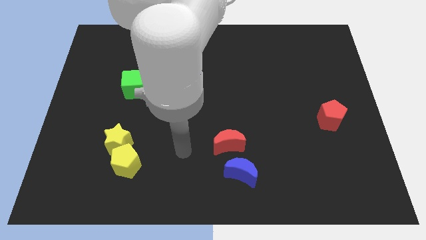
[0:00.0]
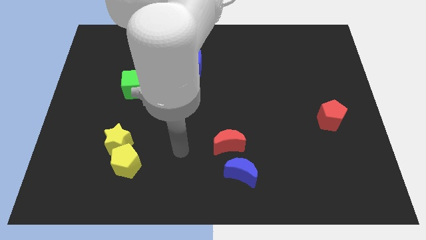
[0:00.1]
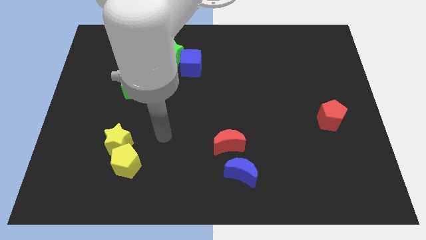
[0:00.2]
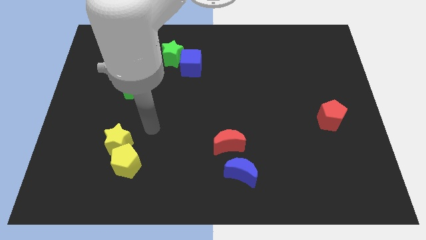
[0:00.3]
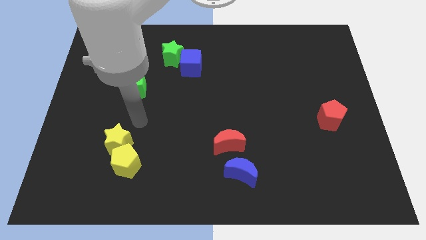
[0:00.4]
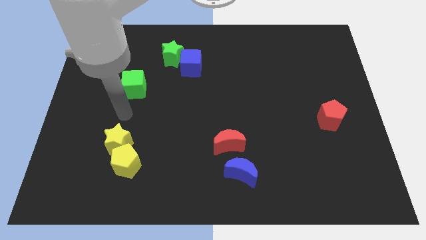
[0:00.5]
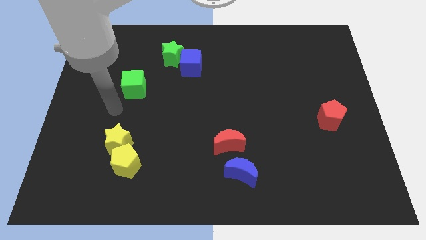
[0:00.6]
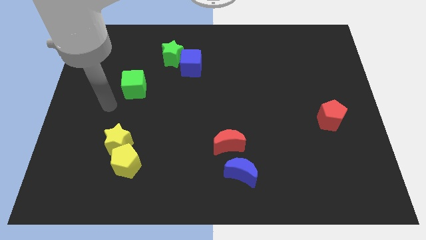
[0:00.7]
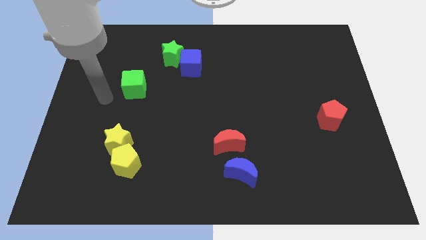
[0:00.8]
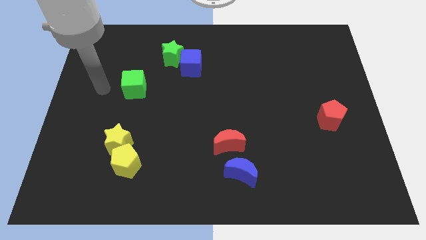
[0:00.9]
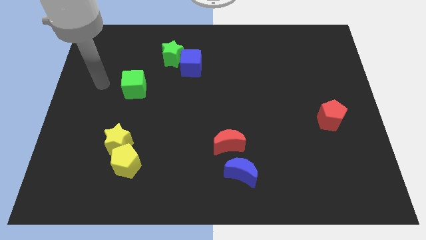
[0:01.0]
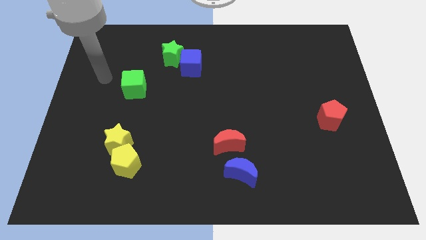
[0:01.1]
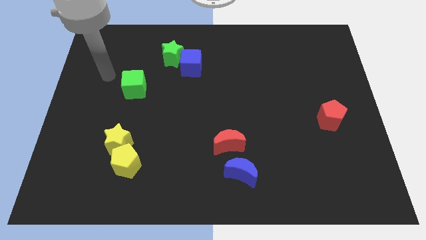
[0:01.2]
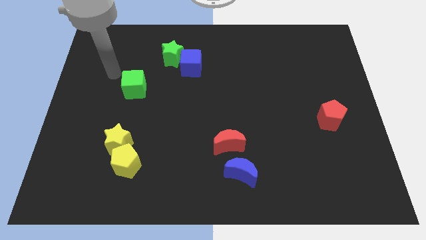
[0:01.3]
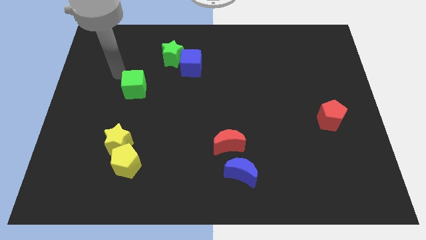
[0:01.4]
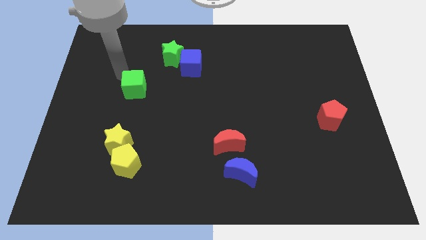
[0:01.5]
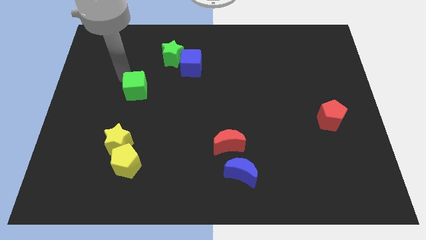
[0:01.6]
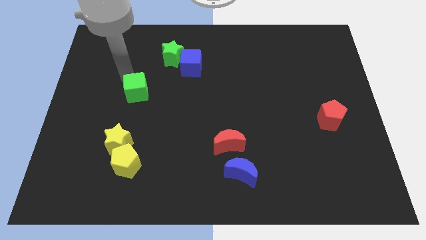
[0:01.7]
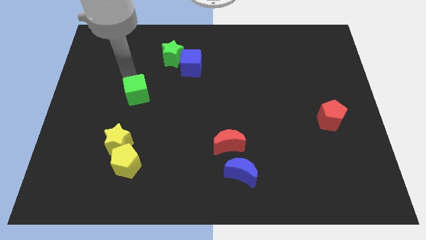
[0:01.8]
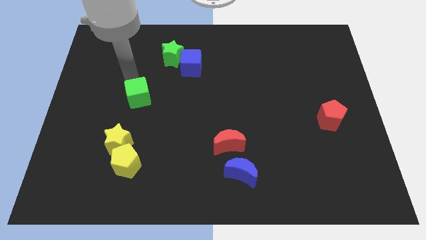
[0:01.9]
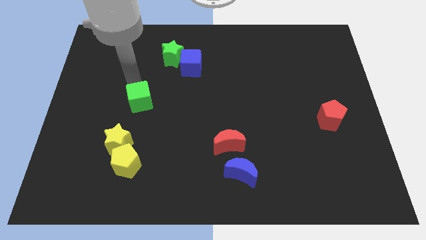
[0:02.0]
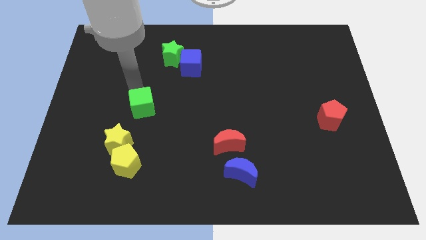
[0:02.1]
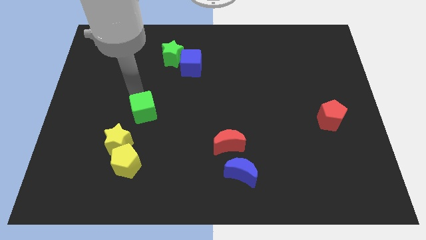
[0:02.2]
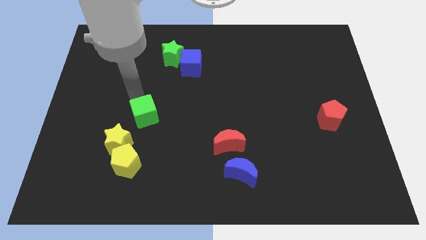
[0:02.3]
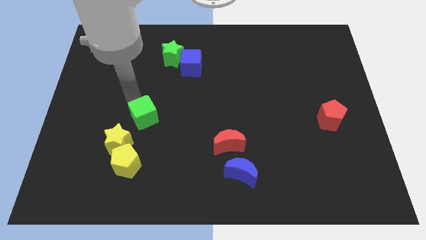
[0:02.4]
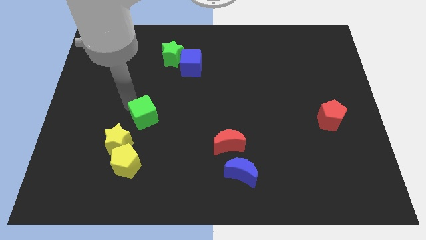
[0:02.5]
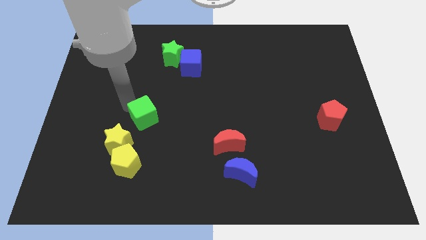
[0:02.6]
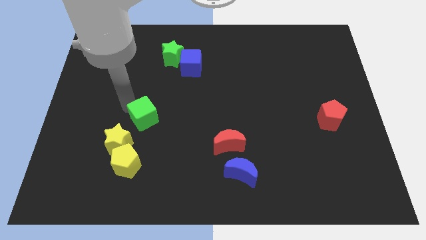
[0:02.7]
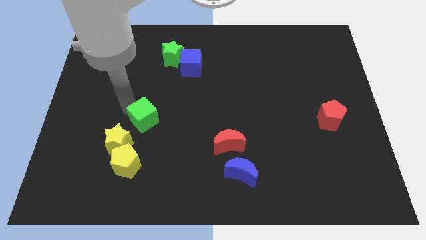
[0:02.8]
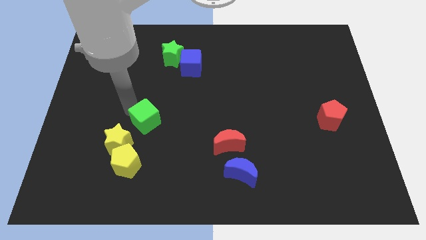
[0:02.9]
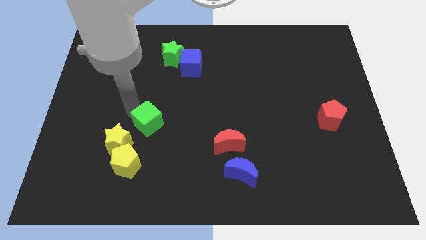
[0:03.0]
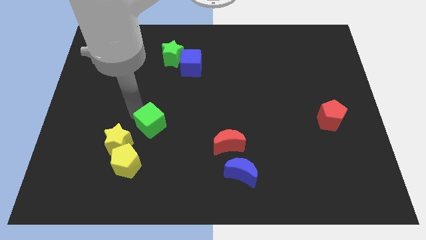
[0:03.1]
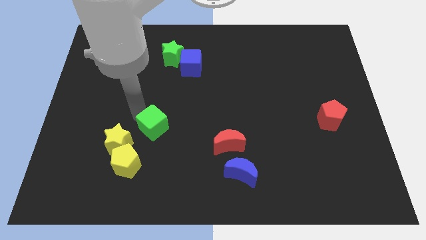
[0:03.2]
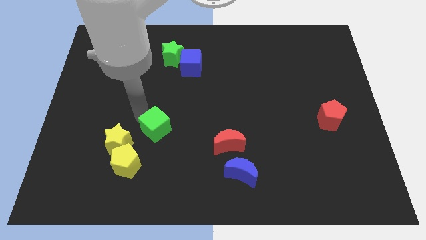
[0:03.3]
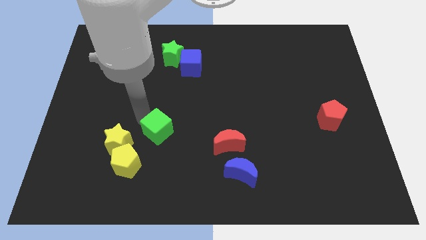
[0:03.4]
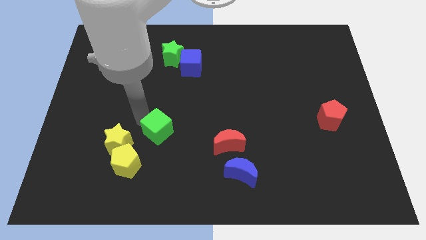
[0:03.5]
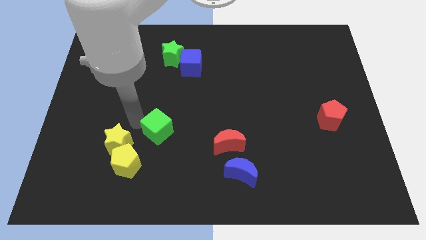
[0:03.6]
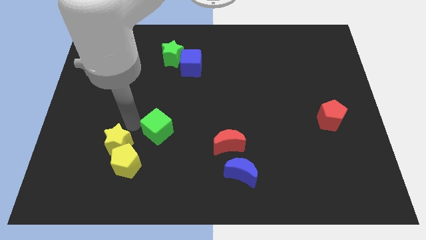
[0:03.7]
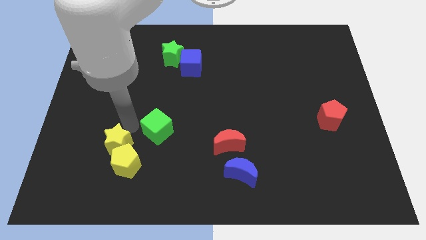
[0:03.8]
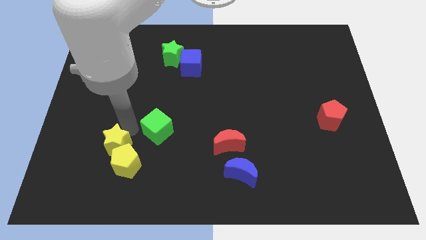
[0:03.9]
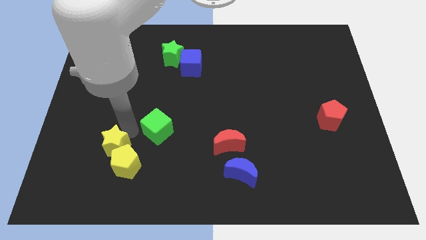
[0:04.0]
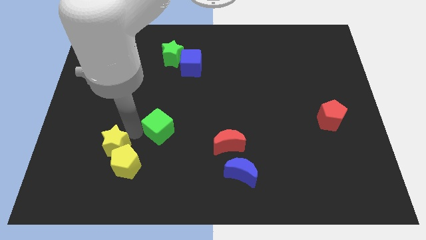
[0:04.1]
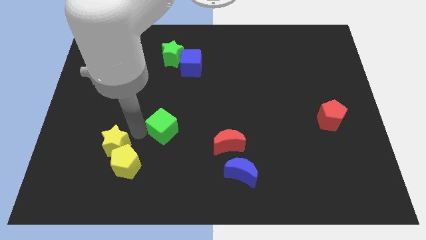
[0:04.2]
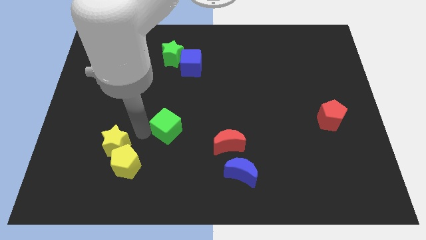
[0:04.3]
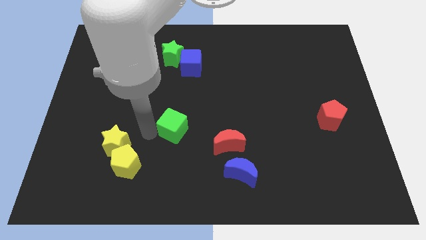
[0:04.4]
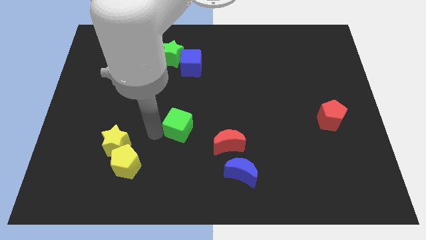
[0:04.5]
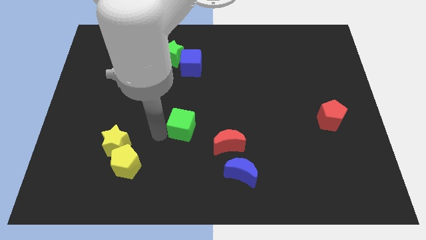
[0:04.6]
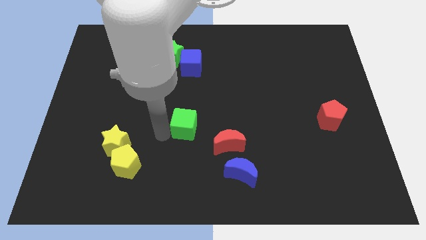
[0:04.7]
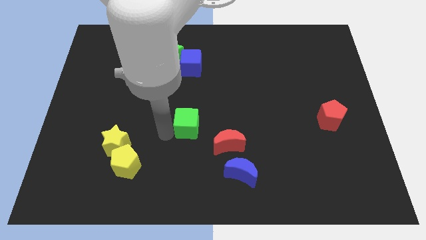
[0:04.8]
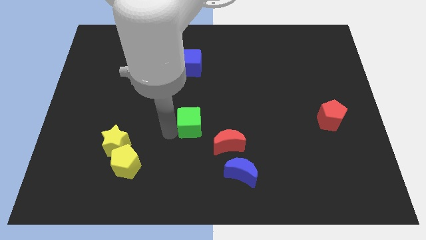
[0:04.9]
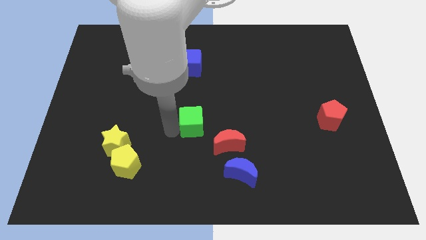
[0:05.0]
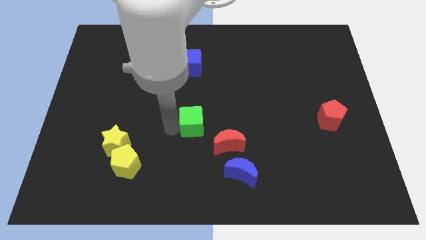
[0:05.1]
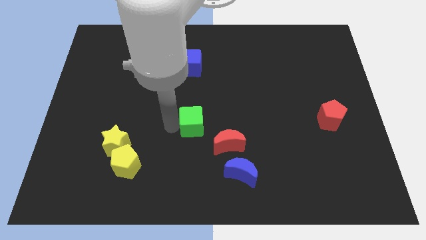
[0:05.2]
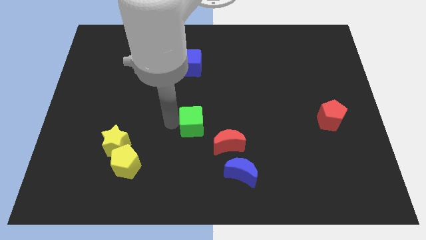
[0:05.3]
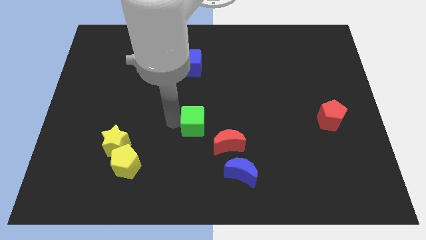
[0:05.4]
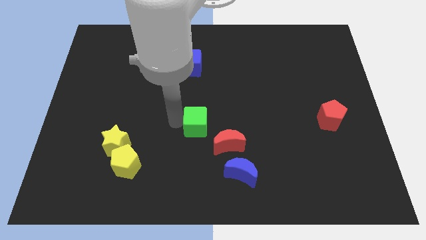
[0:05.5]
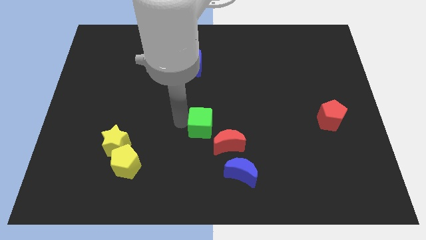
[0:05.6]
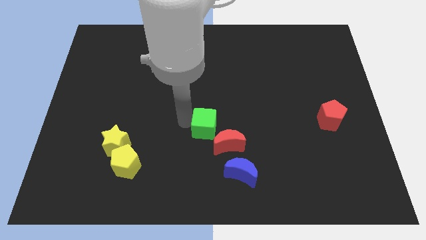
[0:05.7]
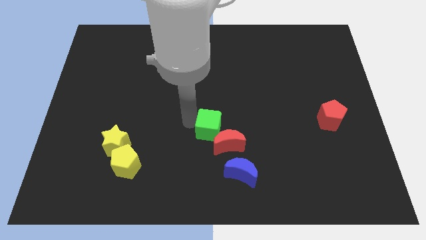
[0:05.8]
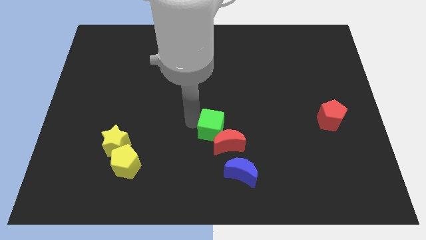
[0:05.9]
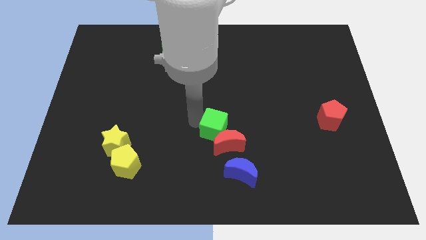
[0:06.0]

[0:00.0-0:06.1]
put the green cube next to the red moon

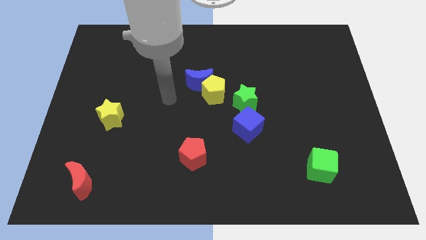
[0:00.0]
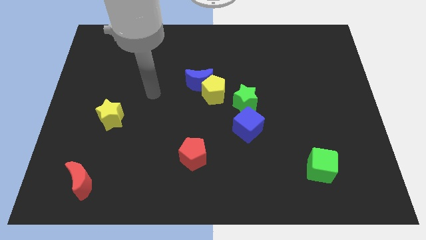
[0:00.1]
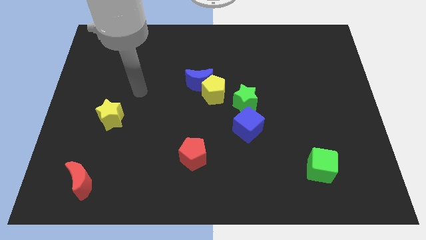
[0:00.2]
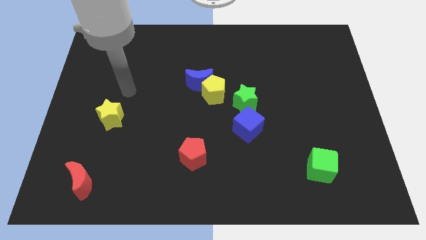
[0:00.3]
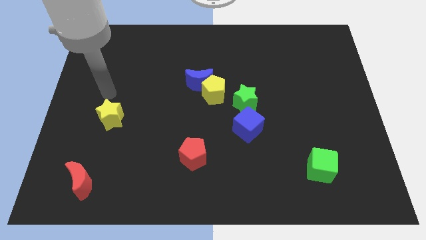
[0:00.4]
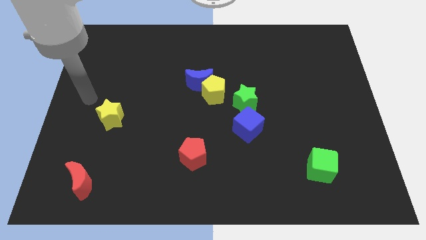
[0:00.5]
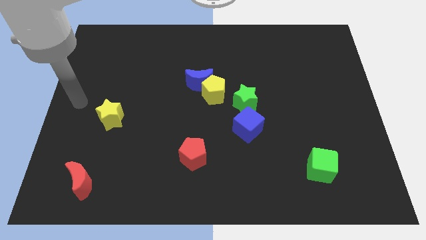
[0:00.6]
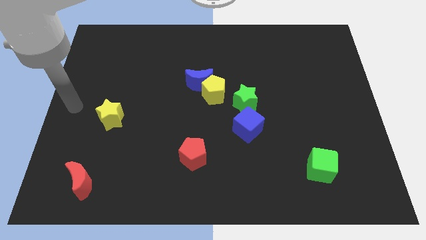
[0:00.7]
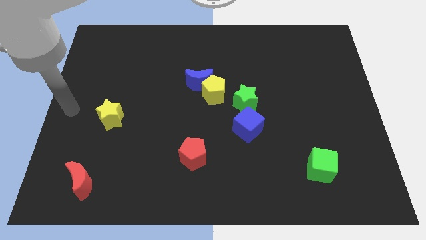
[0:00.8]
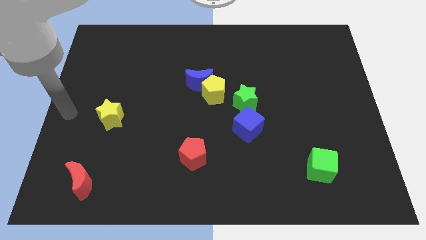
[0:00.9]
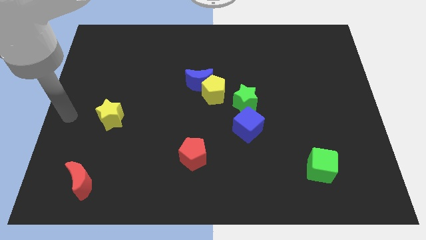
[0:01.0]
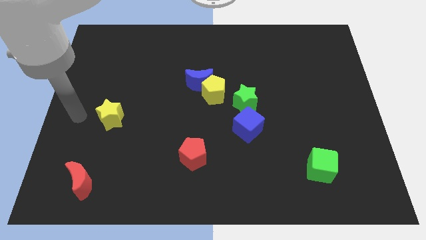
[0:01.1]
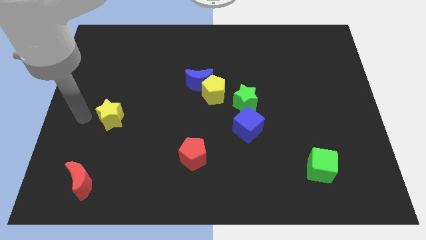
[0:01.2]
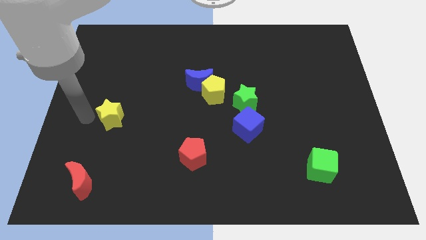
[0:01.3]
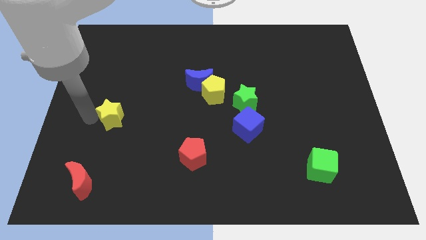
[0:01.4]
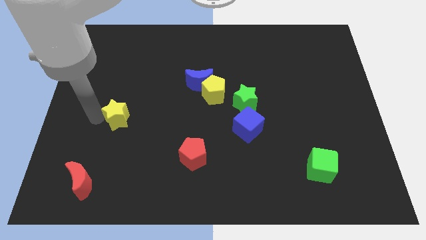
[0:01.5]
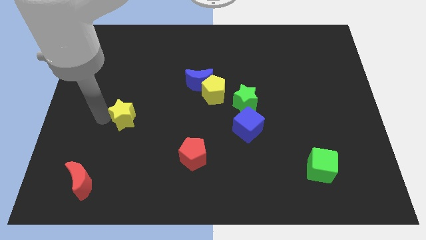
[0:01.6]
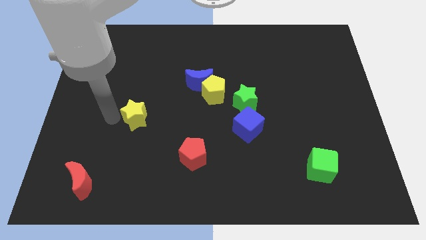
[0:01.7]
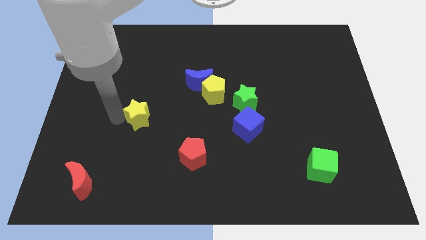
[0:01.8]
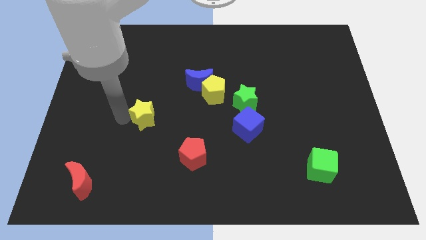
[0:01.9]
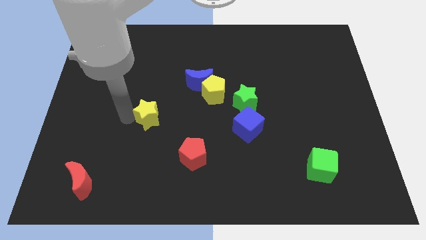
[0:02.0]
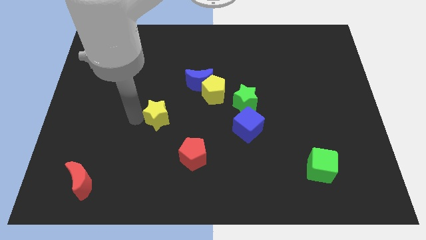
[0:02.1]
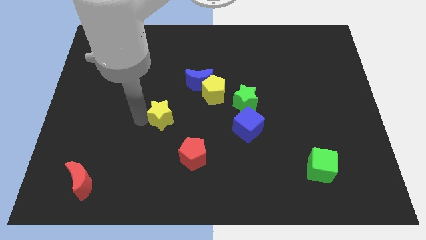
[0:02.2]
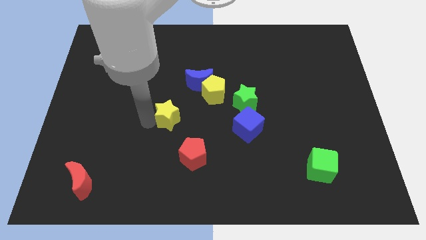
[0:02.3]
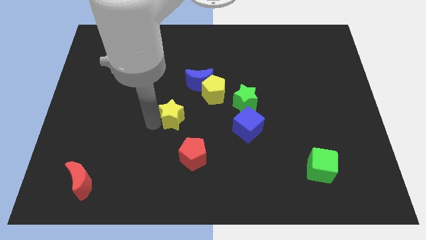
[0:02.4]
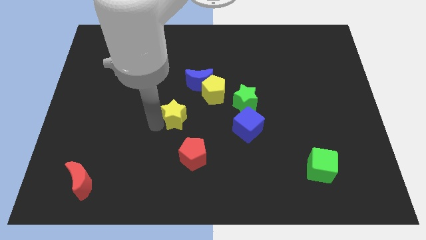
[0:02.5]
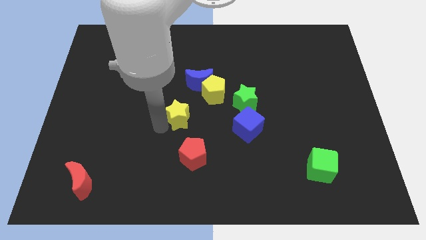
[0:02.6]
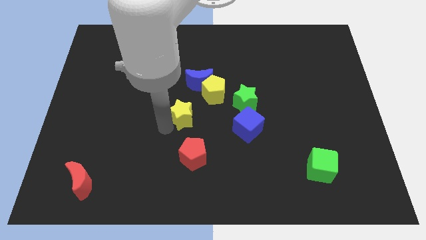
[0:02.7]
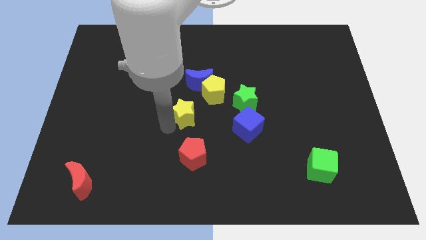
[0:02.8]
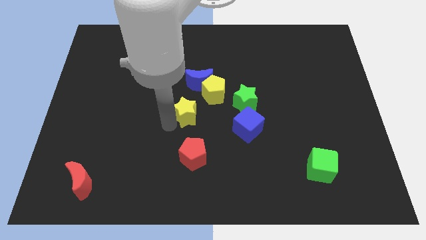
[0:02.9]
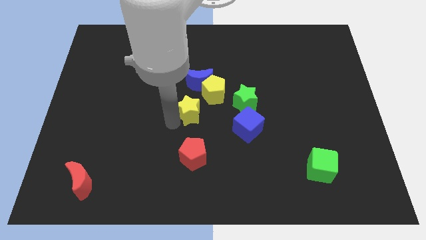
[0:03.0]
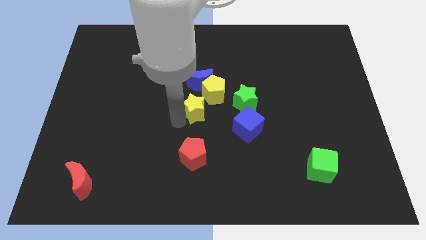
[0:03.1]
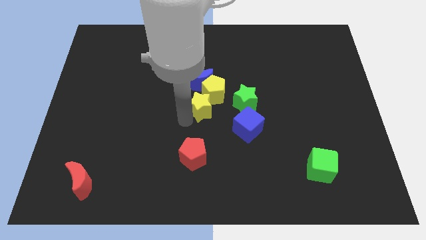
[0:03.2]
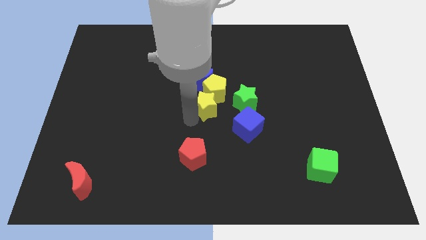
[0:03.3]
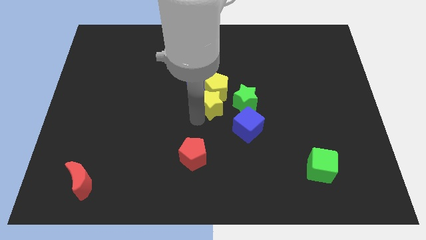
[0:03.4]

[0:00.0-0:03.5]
move the yellow star next to the yellow pentagon
